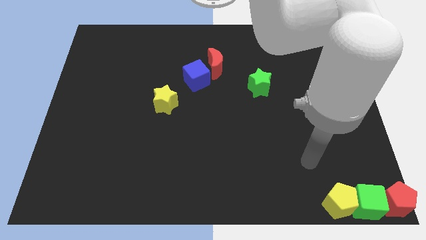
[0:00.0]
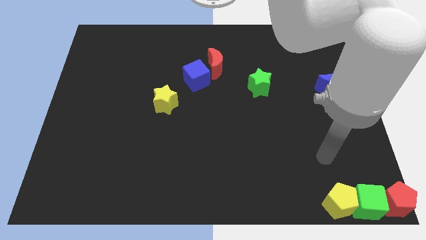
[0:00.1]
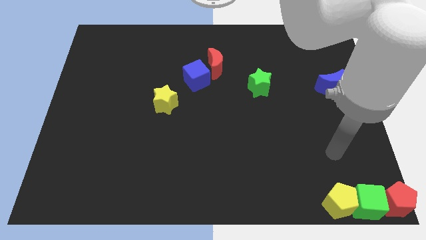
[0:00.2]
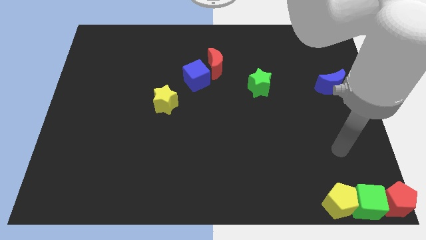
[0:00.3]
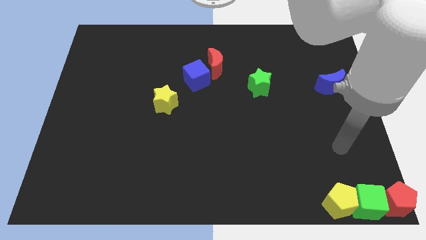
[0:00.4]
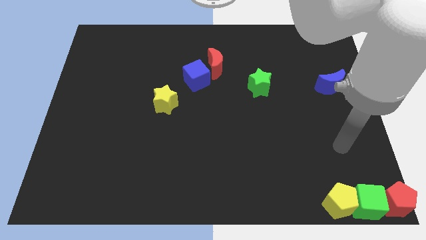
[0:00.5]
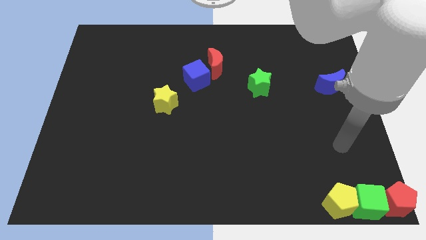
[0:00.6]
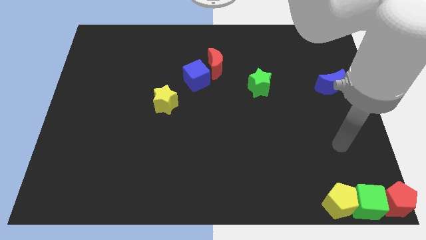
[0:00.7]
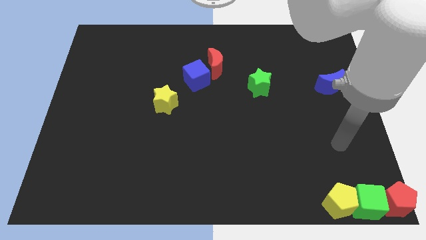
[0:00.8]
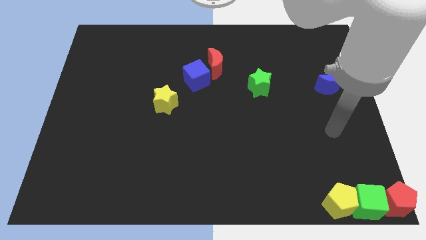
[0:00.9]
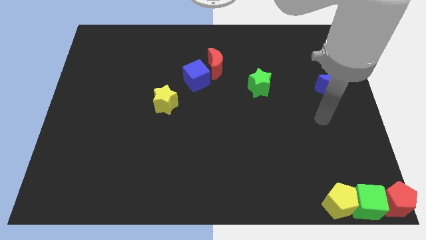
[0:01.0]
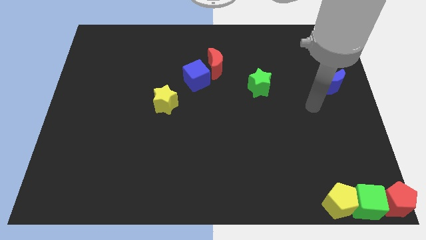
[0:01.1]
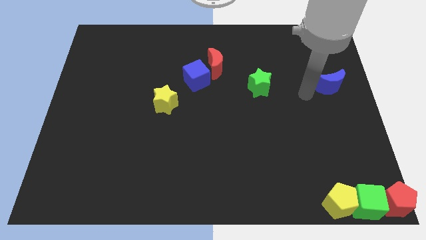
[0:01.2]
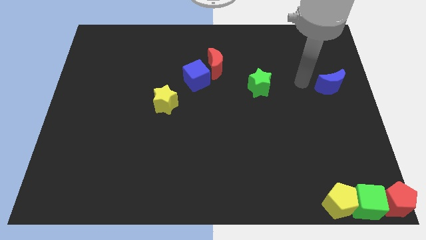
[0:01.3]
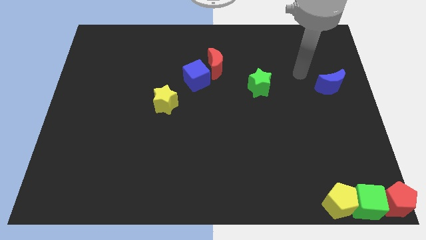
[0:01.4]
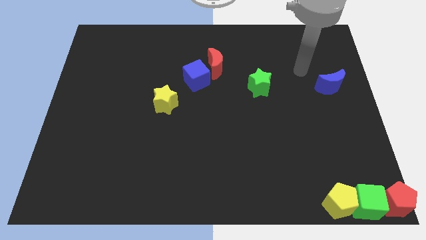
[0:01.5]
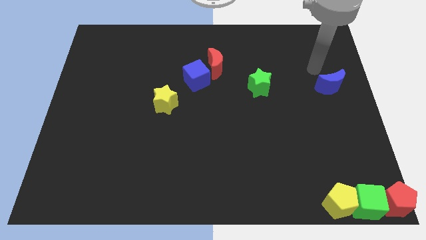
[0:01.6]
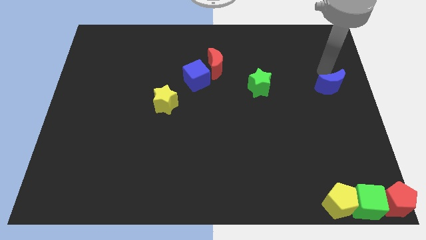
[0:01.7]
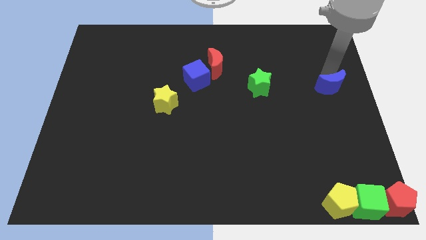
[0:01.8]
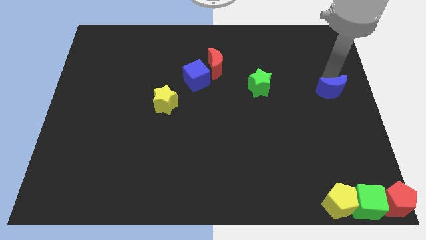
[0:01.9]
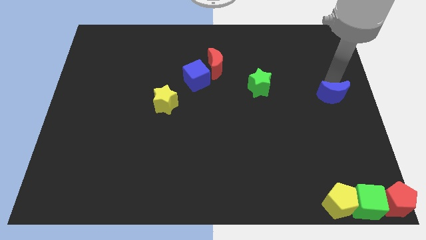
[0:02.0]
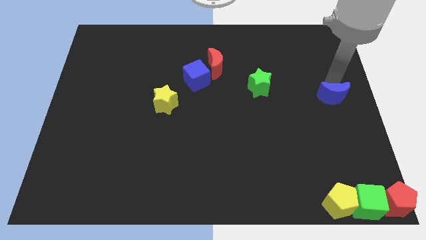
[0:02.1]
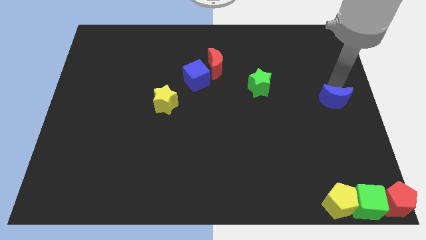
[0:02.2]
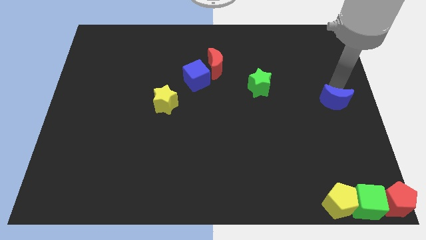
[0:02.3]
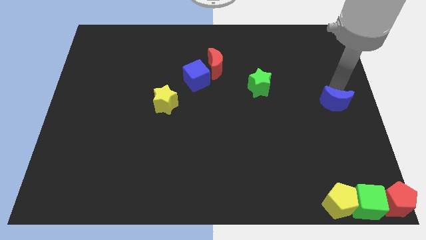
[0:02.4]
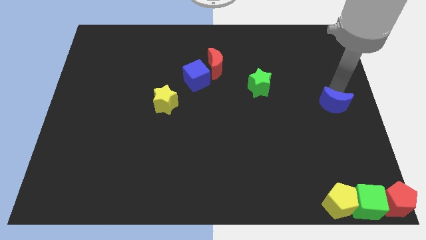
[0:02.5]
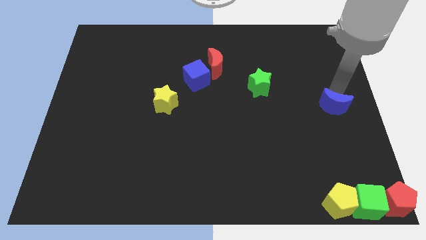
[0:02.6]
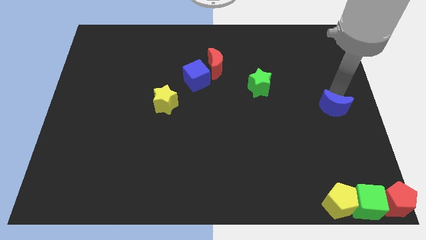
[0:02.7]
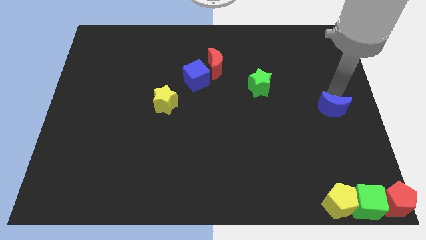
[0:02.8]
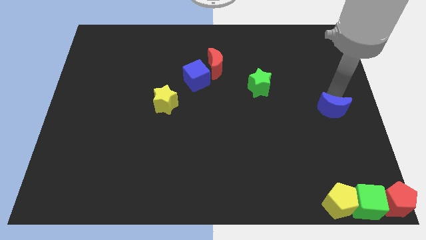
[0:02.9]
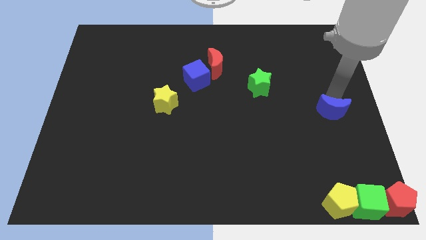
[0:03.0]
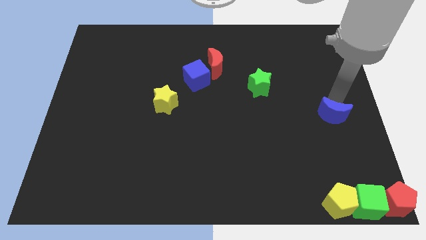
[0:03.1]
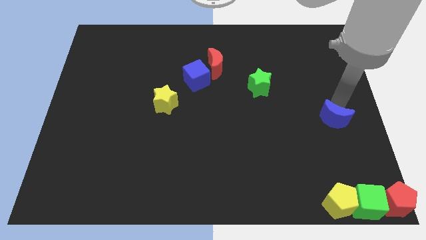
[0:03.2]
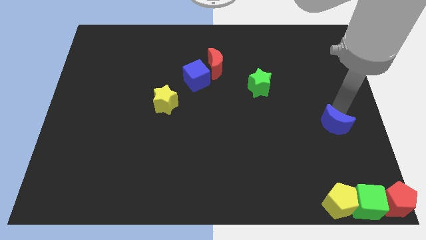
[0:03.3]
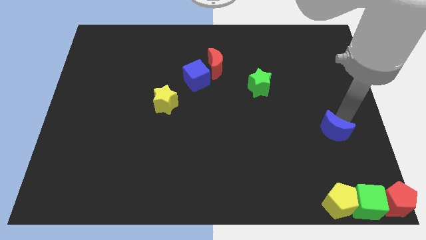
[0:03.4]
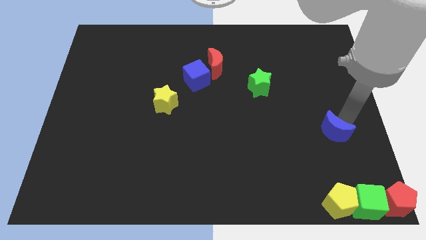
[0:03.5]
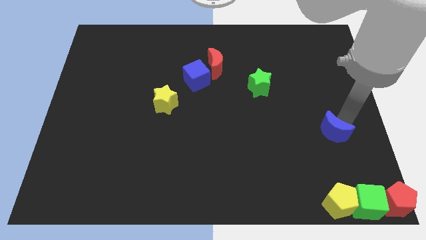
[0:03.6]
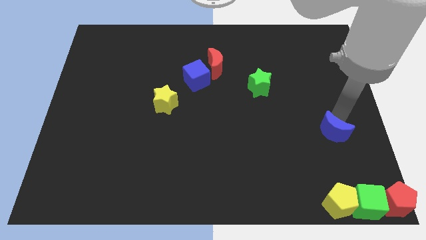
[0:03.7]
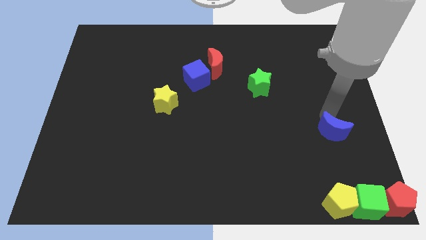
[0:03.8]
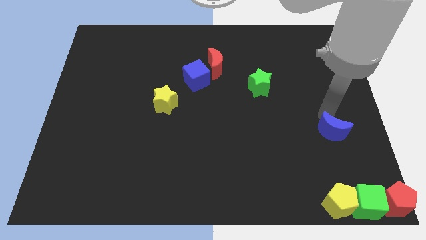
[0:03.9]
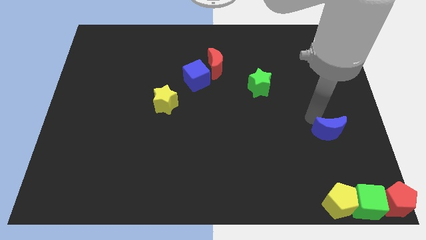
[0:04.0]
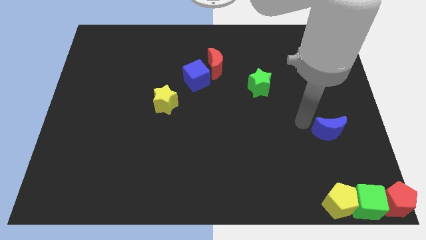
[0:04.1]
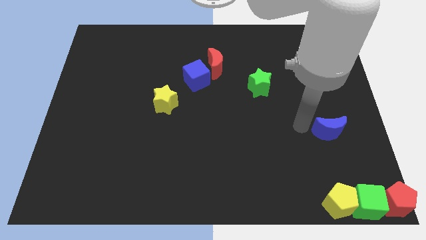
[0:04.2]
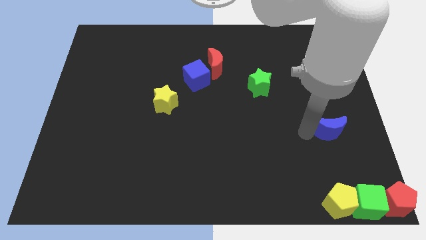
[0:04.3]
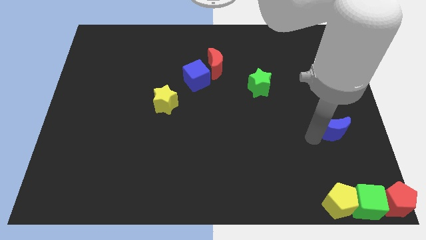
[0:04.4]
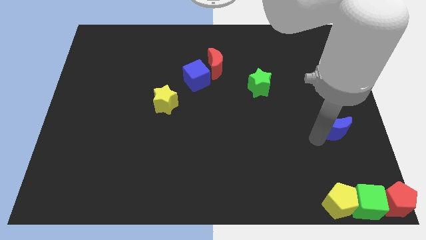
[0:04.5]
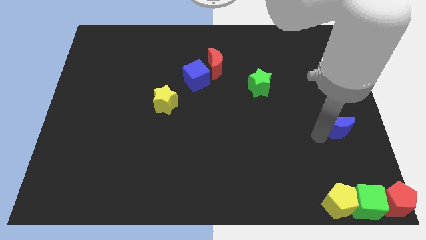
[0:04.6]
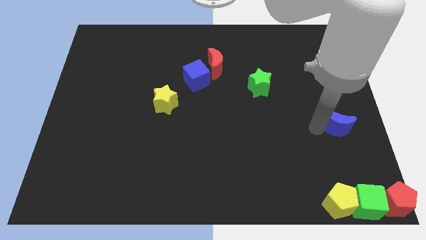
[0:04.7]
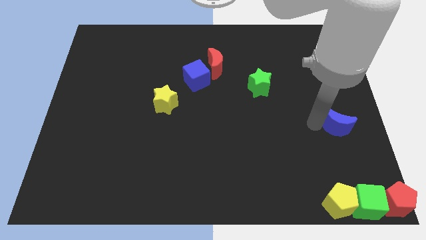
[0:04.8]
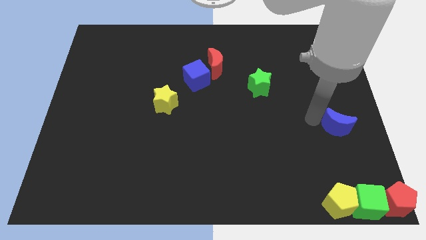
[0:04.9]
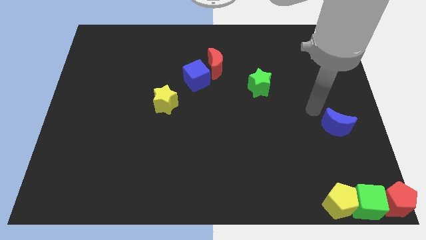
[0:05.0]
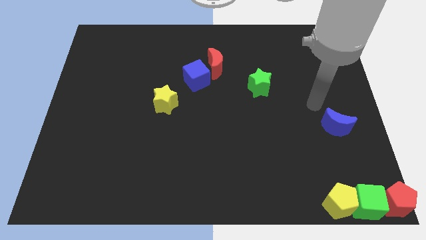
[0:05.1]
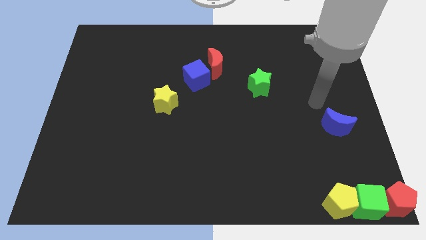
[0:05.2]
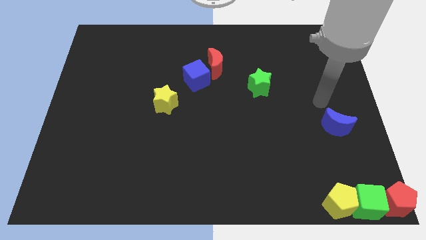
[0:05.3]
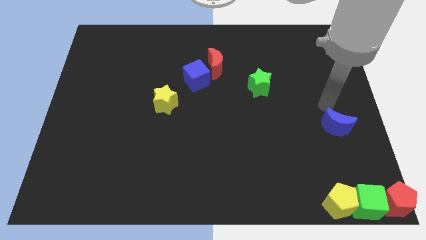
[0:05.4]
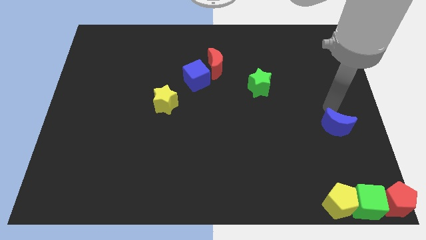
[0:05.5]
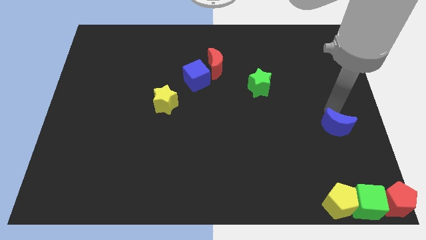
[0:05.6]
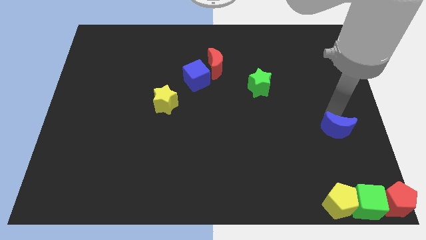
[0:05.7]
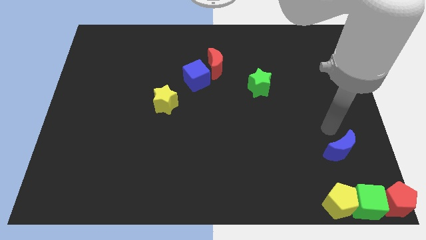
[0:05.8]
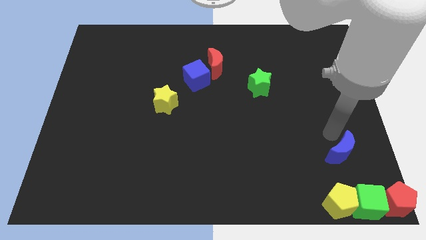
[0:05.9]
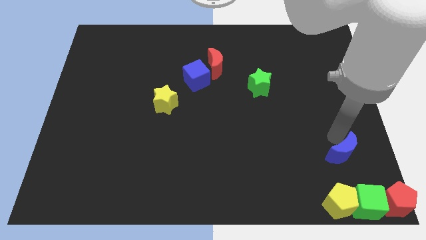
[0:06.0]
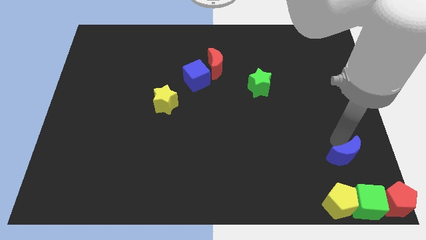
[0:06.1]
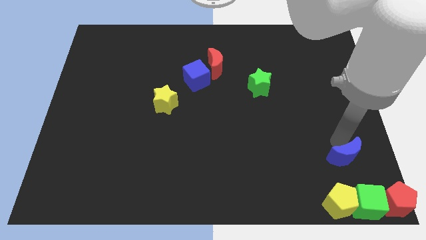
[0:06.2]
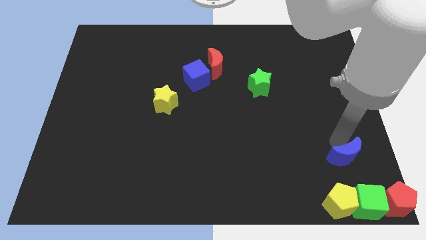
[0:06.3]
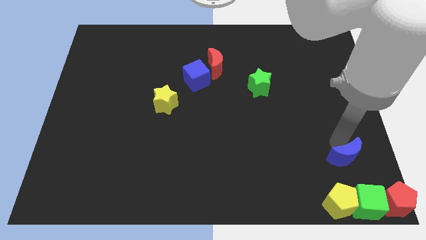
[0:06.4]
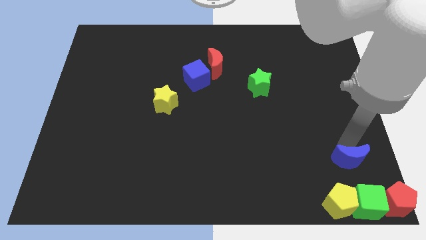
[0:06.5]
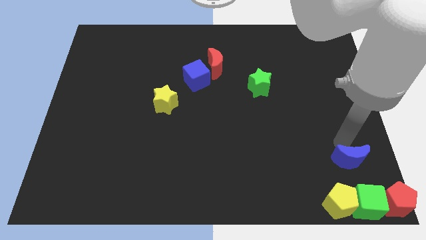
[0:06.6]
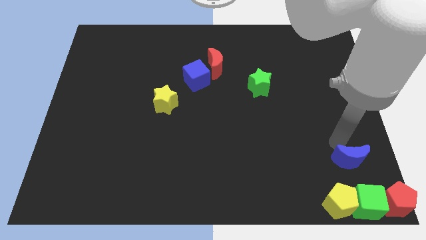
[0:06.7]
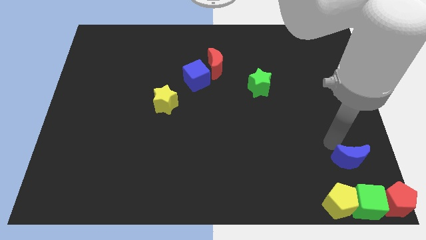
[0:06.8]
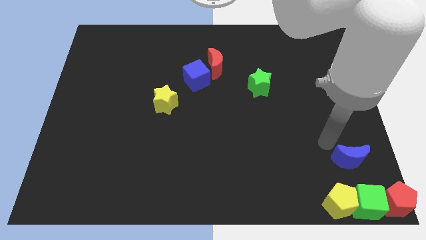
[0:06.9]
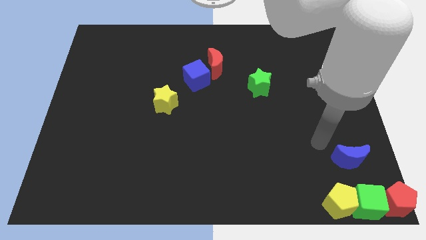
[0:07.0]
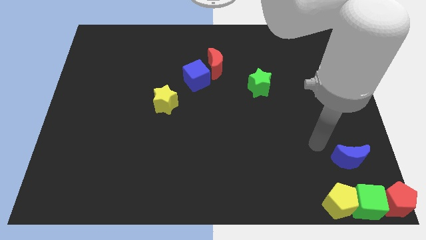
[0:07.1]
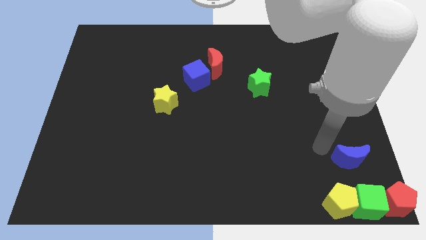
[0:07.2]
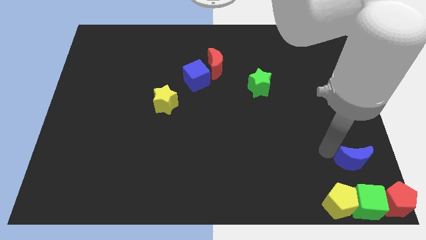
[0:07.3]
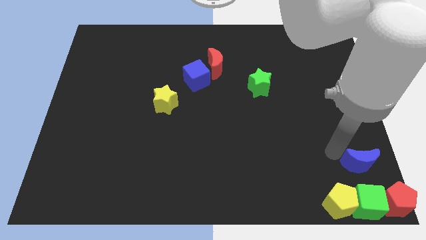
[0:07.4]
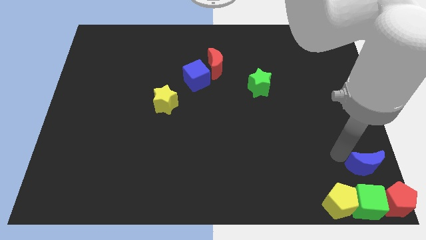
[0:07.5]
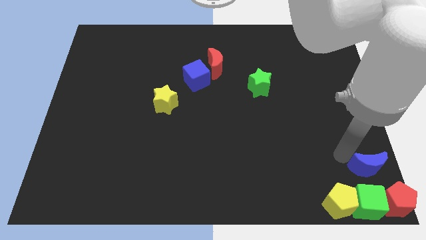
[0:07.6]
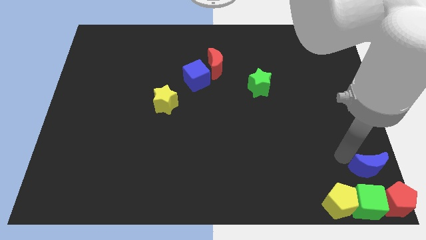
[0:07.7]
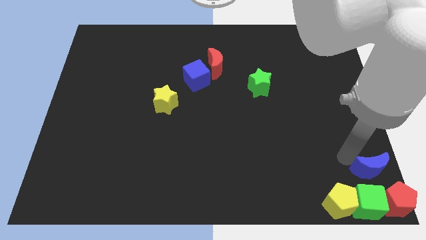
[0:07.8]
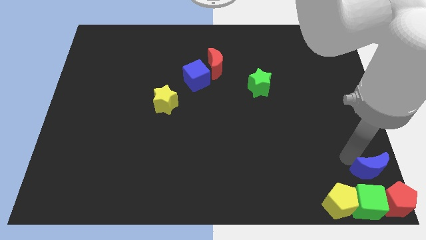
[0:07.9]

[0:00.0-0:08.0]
place the blue moon at the top of the green cube

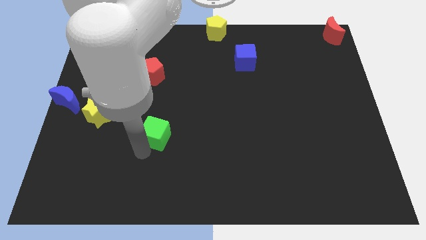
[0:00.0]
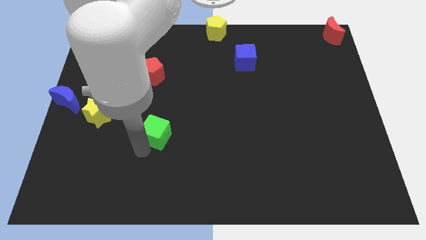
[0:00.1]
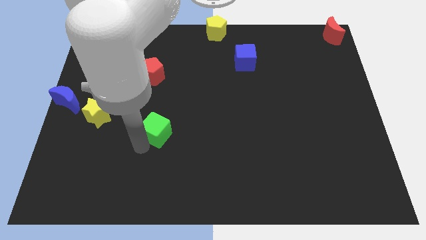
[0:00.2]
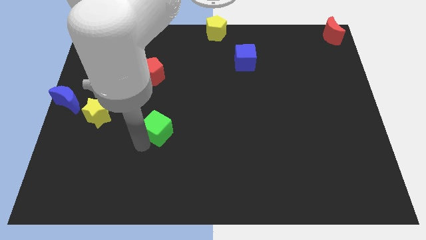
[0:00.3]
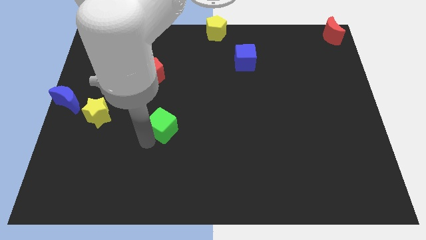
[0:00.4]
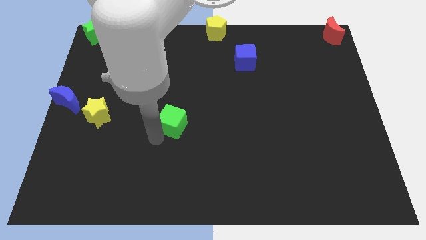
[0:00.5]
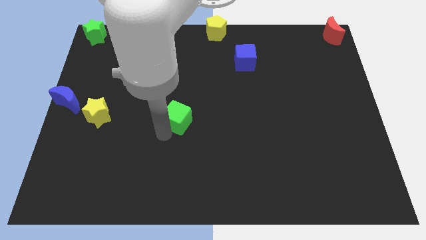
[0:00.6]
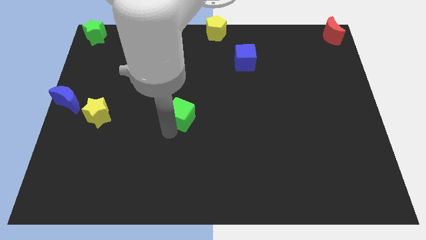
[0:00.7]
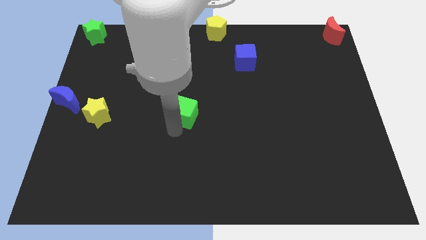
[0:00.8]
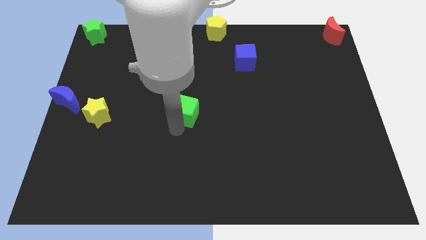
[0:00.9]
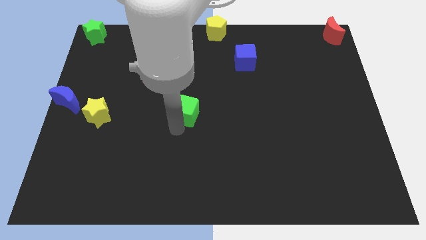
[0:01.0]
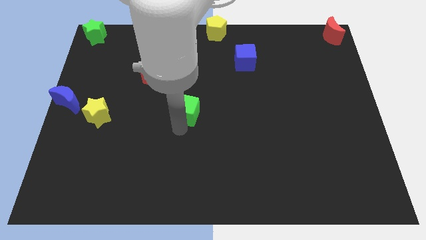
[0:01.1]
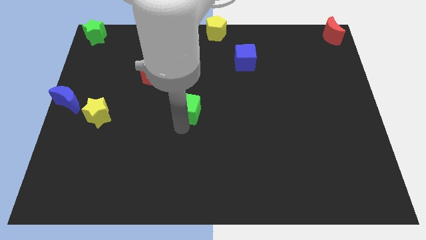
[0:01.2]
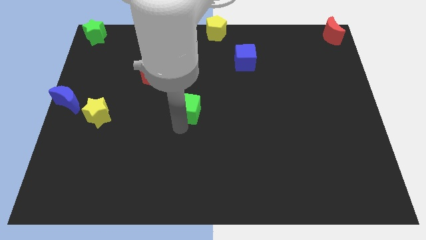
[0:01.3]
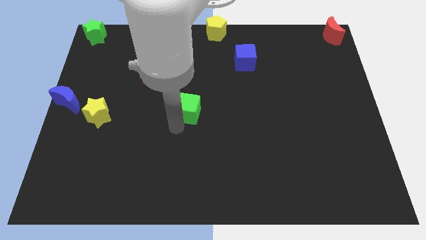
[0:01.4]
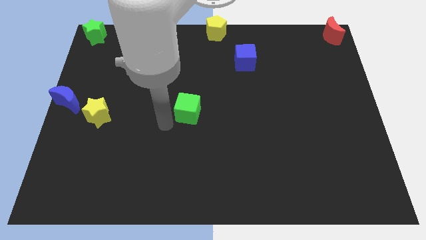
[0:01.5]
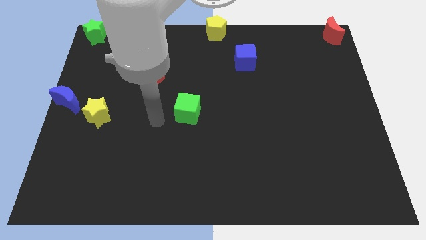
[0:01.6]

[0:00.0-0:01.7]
slide the green cube parallel to the right of the yellow star
